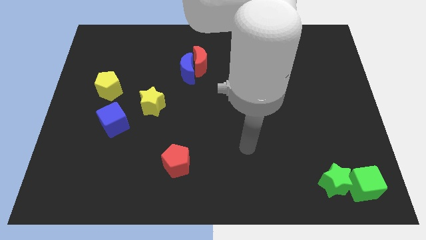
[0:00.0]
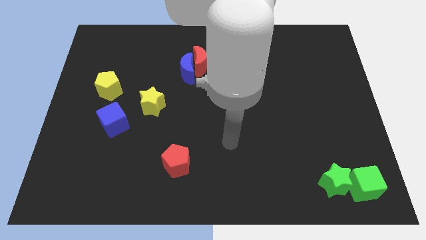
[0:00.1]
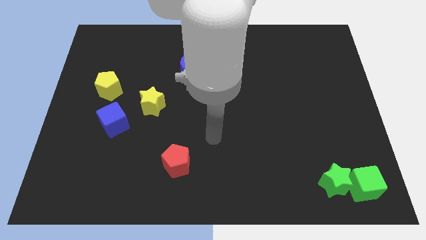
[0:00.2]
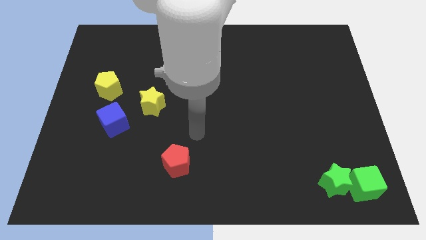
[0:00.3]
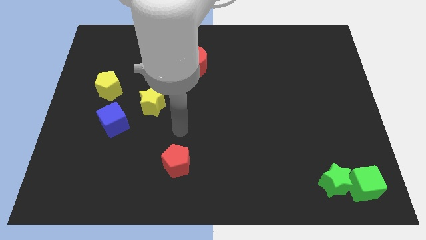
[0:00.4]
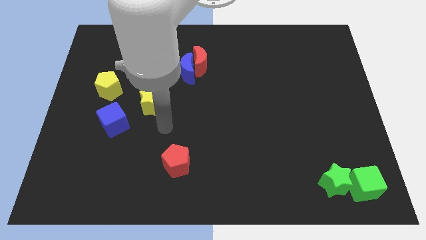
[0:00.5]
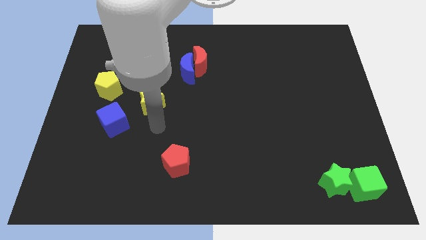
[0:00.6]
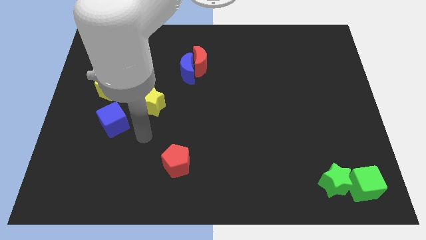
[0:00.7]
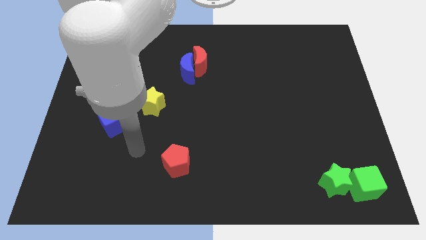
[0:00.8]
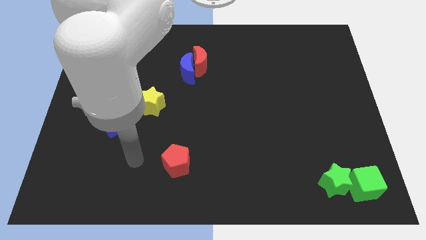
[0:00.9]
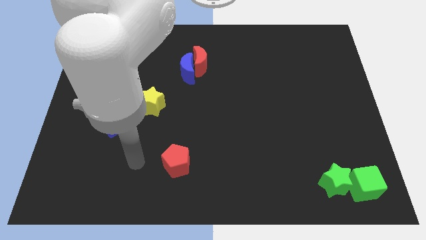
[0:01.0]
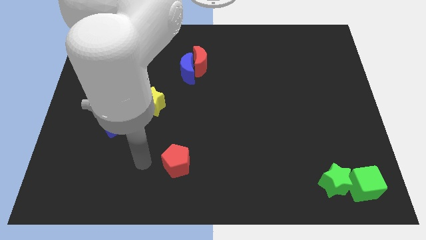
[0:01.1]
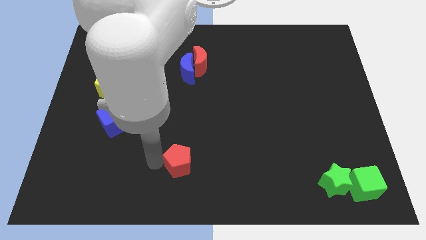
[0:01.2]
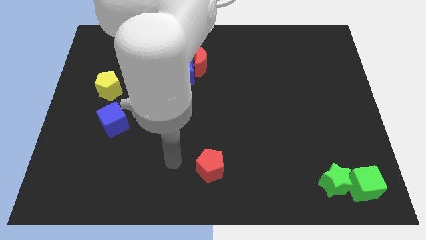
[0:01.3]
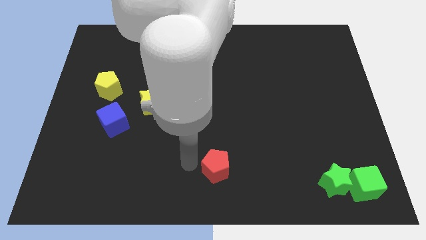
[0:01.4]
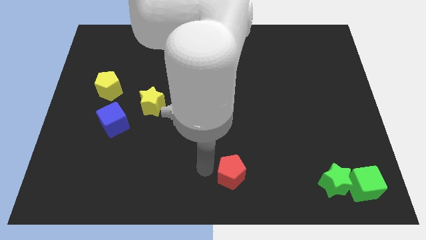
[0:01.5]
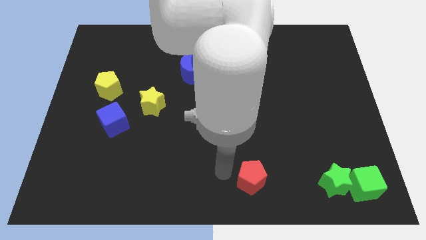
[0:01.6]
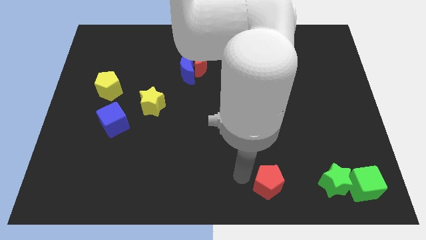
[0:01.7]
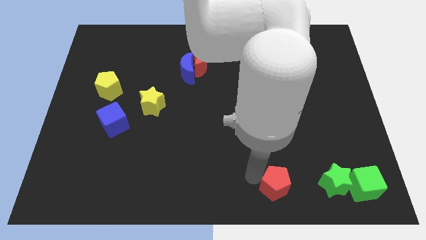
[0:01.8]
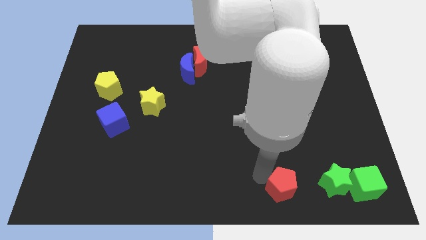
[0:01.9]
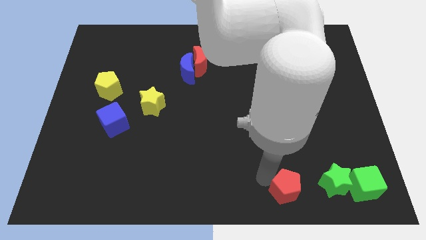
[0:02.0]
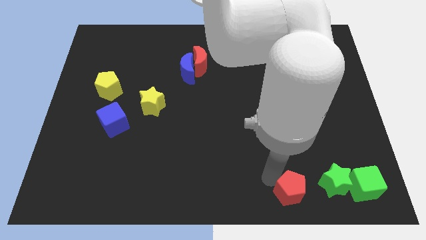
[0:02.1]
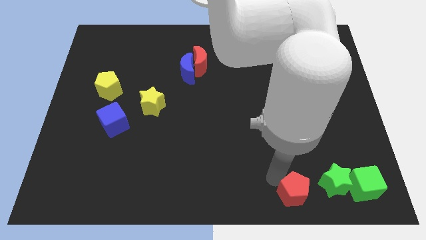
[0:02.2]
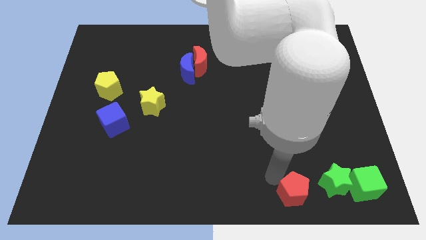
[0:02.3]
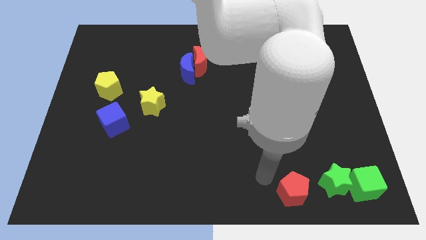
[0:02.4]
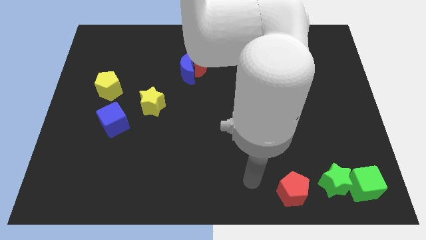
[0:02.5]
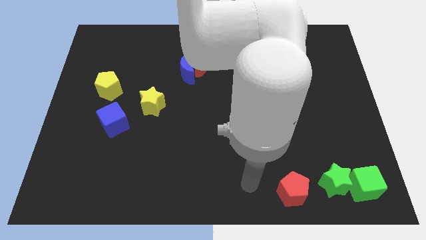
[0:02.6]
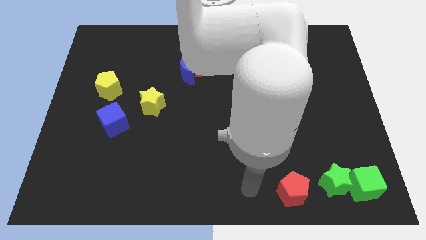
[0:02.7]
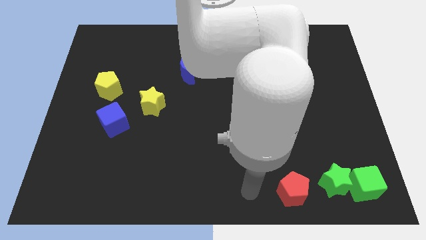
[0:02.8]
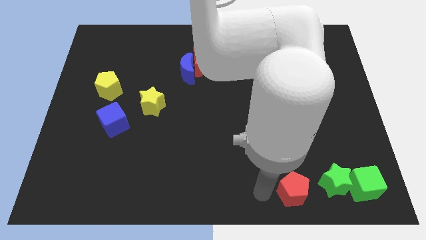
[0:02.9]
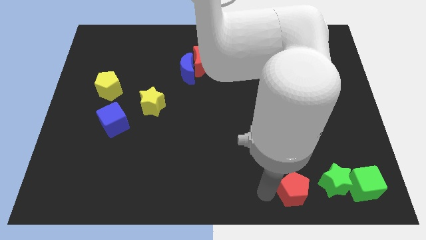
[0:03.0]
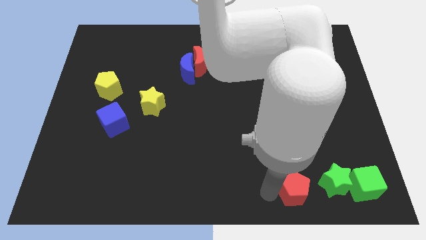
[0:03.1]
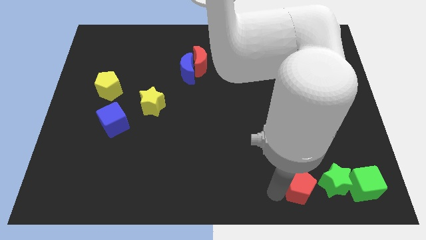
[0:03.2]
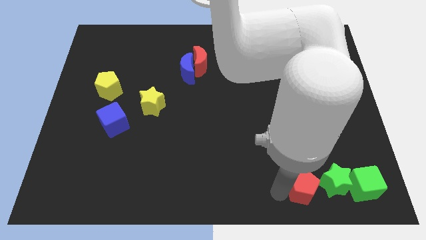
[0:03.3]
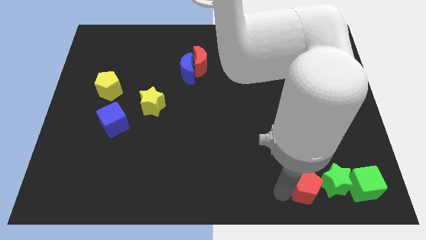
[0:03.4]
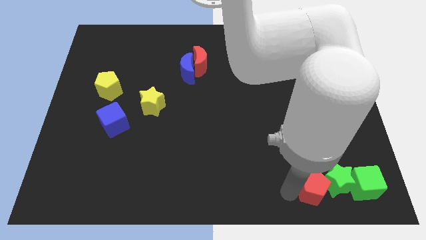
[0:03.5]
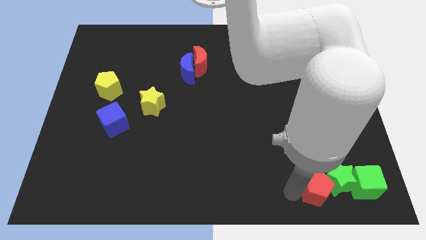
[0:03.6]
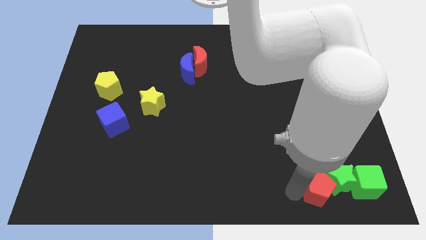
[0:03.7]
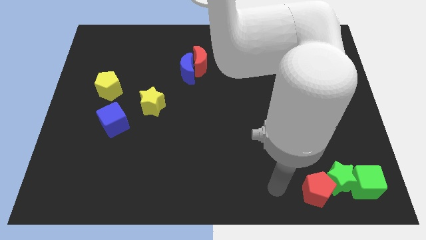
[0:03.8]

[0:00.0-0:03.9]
move the red pentagon left of the green star

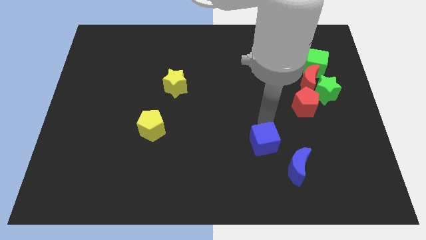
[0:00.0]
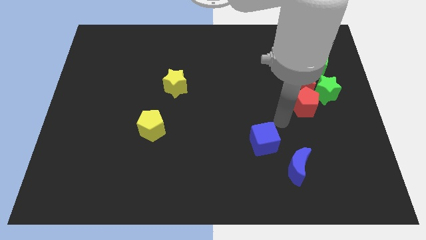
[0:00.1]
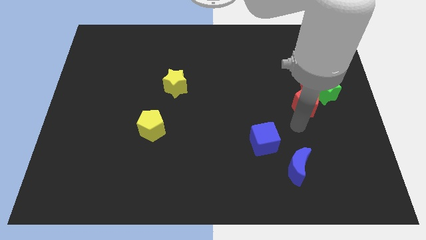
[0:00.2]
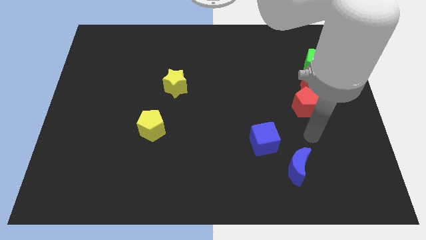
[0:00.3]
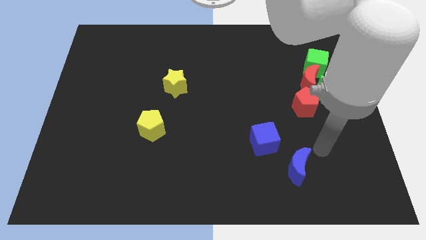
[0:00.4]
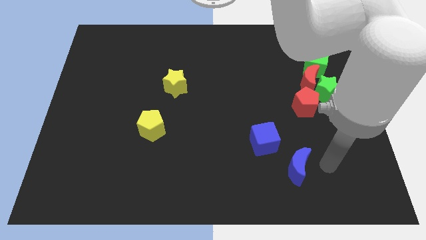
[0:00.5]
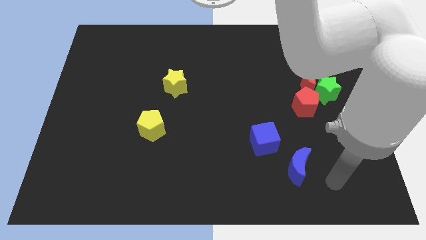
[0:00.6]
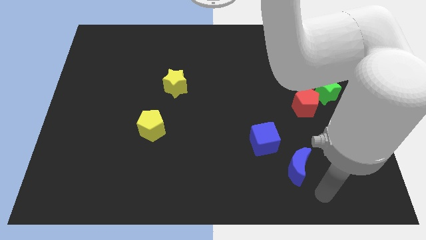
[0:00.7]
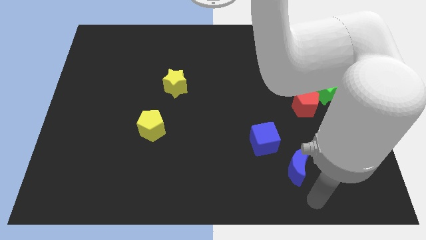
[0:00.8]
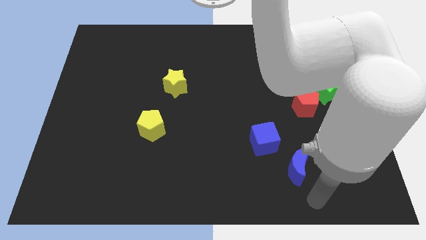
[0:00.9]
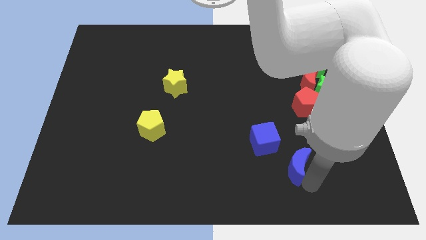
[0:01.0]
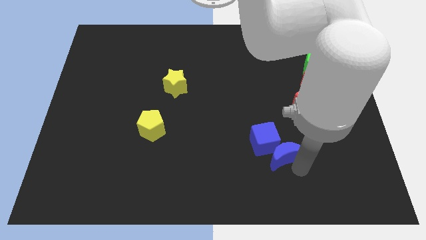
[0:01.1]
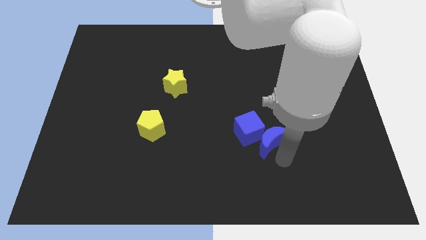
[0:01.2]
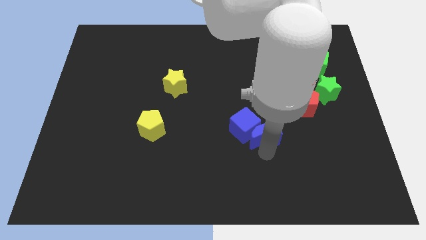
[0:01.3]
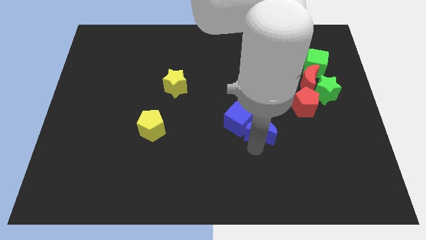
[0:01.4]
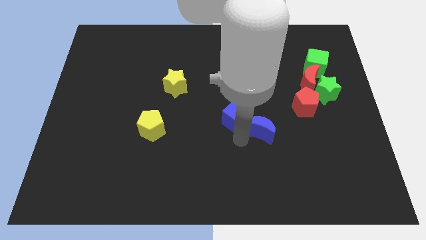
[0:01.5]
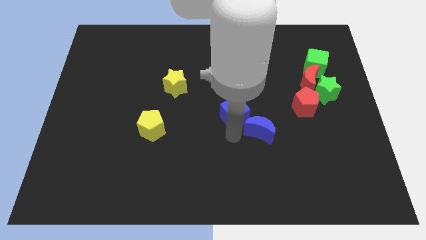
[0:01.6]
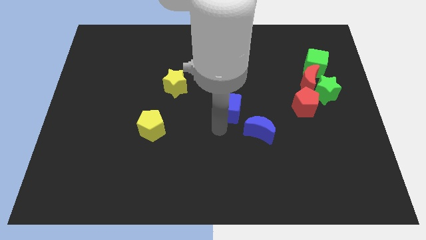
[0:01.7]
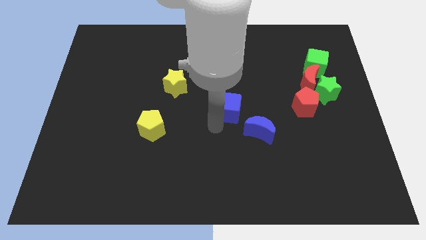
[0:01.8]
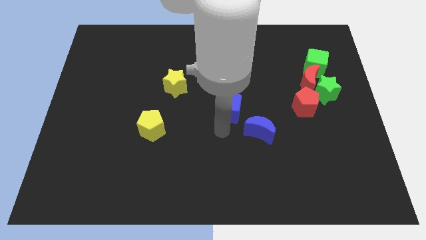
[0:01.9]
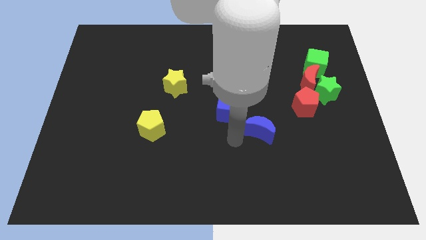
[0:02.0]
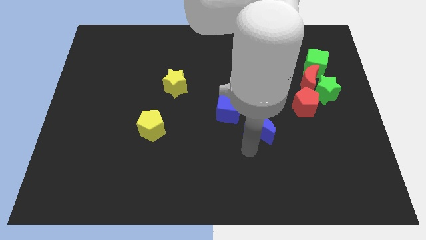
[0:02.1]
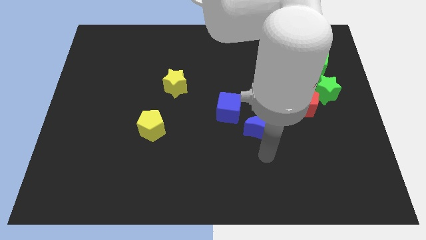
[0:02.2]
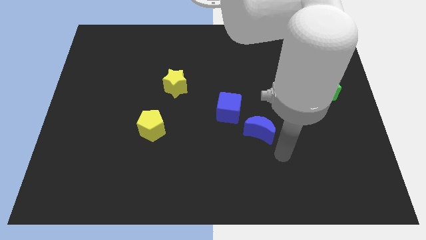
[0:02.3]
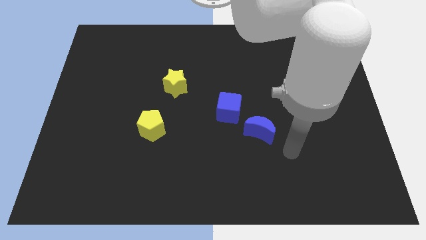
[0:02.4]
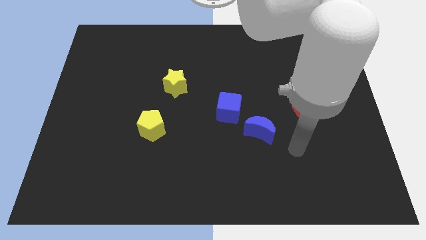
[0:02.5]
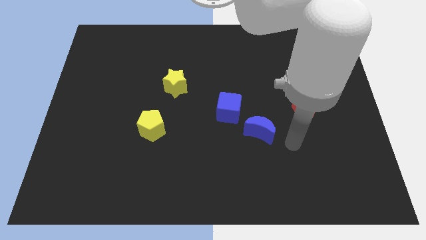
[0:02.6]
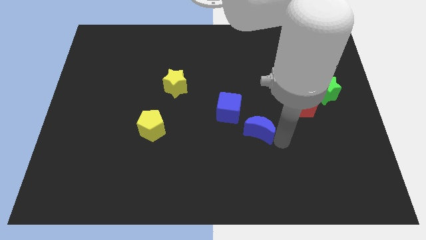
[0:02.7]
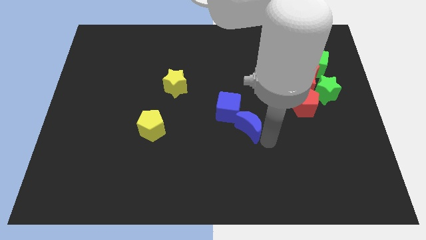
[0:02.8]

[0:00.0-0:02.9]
push the blue moon into blue cube

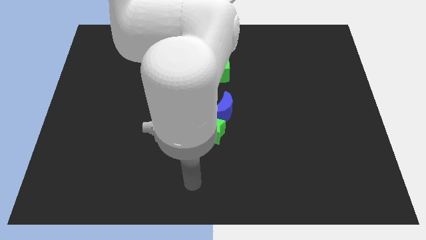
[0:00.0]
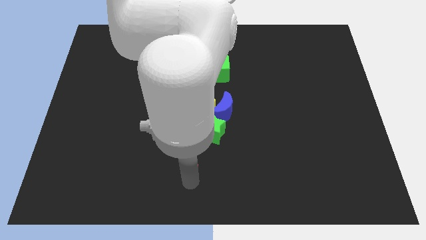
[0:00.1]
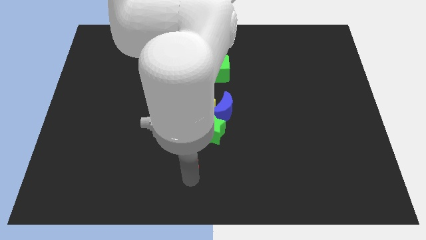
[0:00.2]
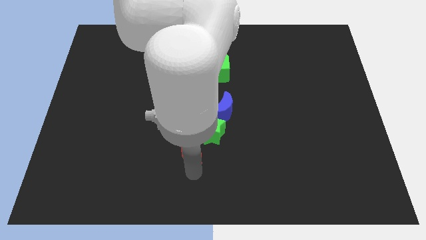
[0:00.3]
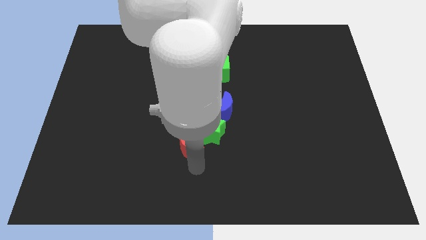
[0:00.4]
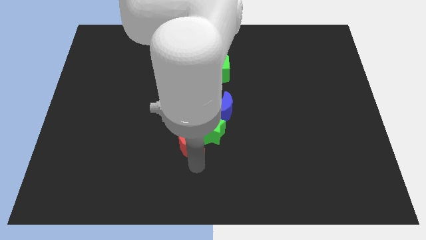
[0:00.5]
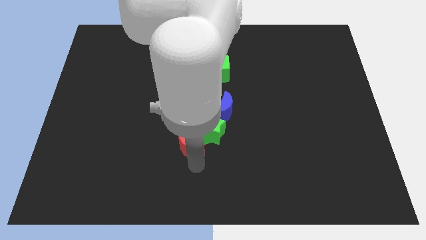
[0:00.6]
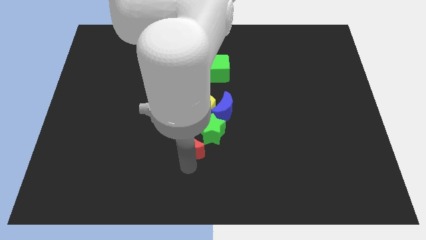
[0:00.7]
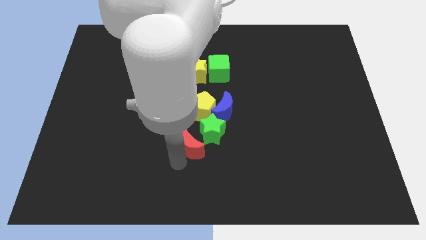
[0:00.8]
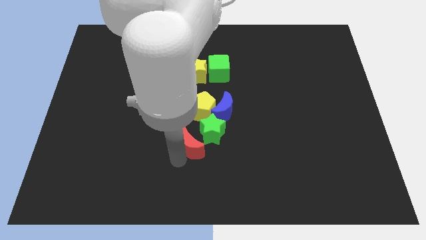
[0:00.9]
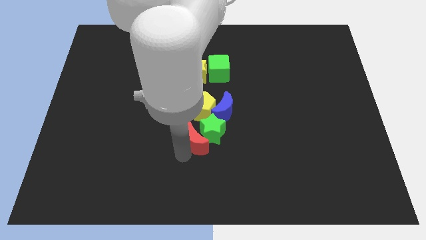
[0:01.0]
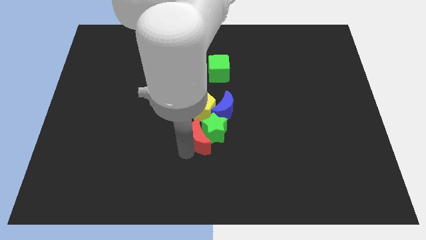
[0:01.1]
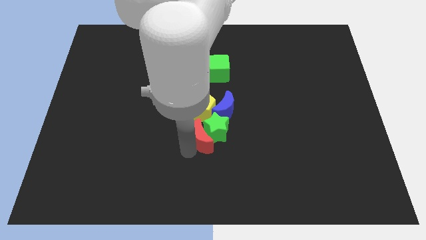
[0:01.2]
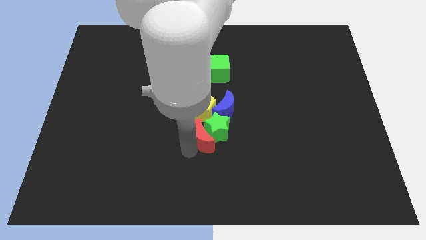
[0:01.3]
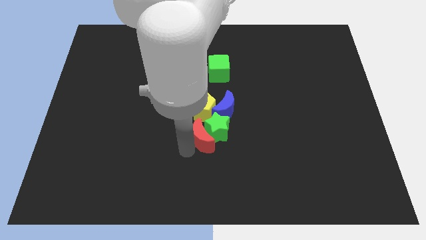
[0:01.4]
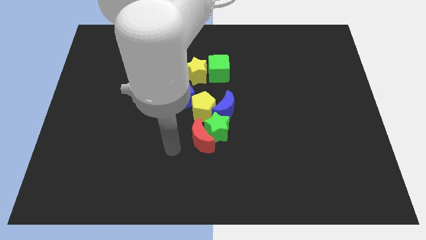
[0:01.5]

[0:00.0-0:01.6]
push the red moon into the green star

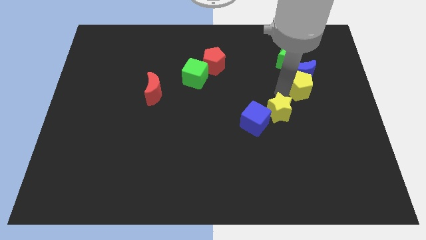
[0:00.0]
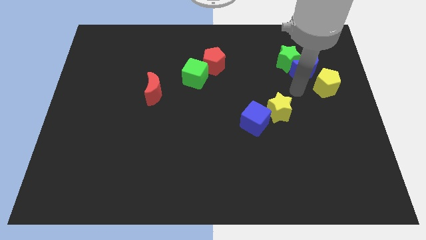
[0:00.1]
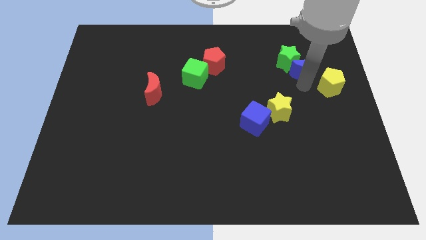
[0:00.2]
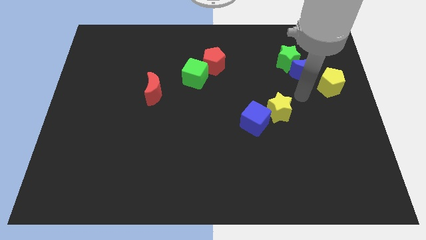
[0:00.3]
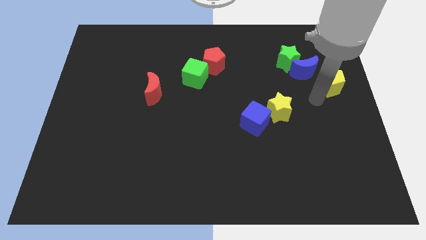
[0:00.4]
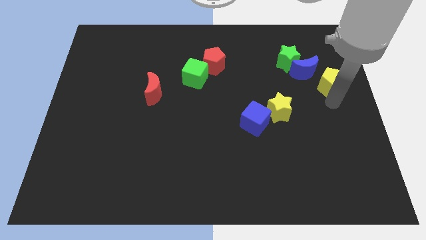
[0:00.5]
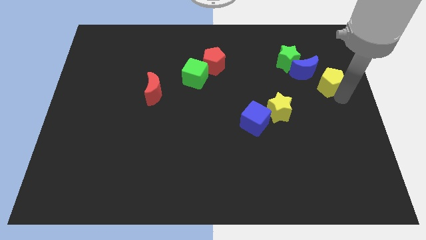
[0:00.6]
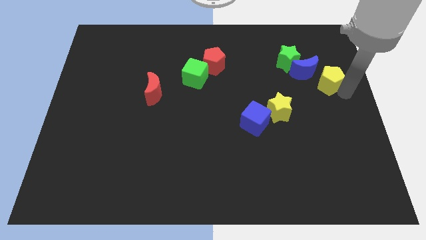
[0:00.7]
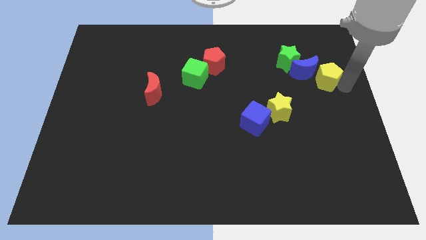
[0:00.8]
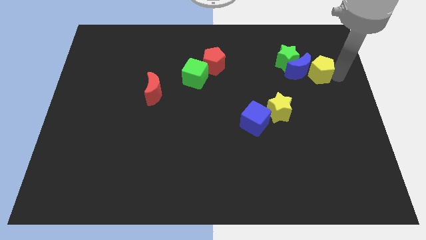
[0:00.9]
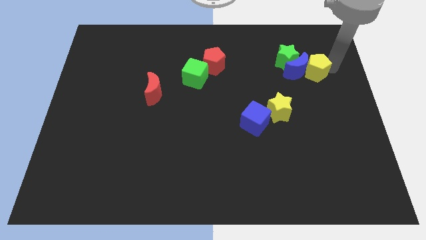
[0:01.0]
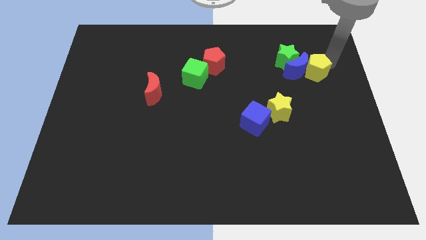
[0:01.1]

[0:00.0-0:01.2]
push the yellow pentagon right to the blur crescent
